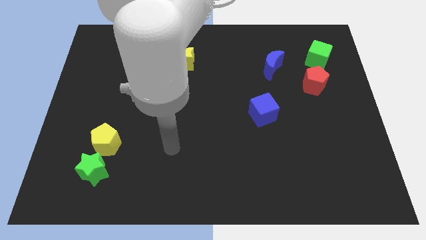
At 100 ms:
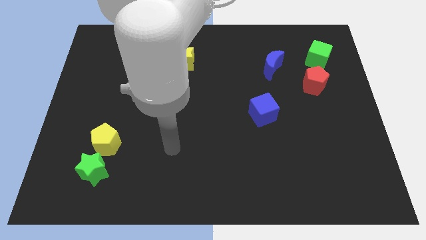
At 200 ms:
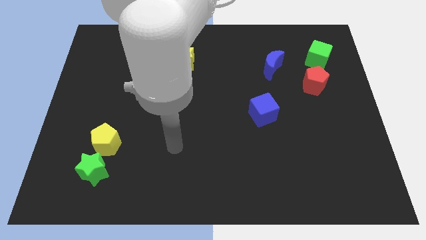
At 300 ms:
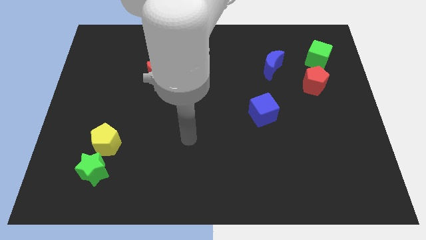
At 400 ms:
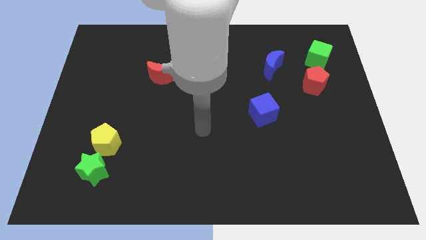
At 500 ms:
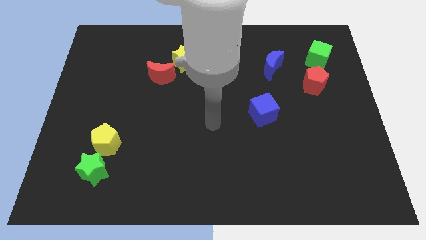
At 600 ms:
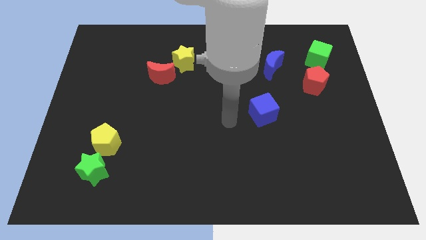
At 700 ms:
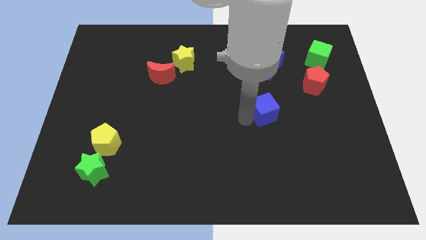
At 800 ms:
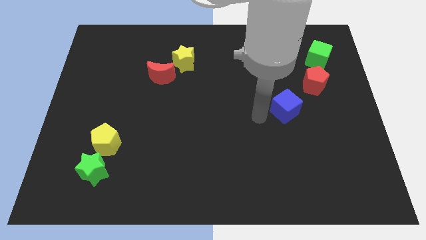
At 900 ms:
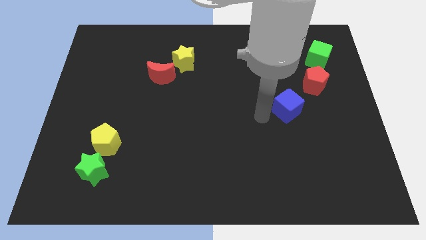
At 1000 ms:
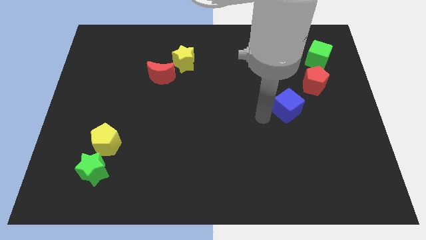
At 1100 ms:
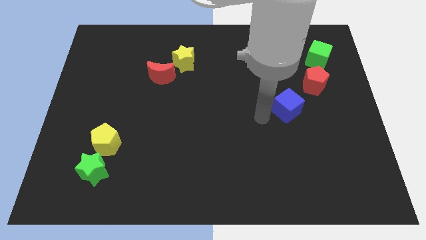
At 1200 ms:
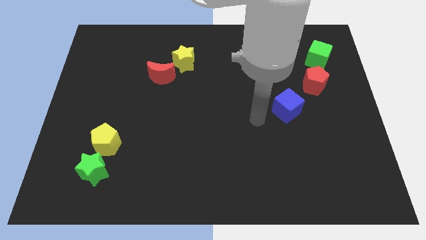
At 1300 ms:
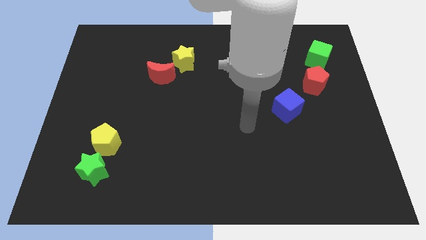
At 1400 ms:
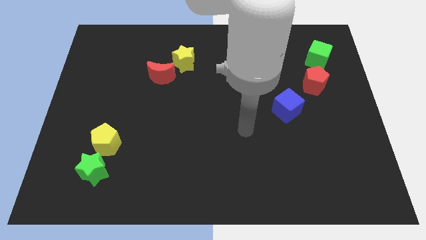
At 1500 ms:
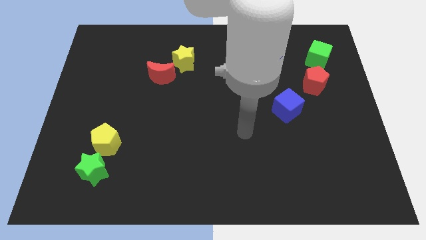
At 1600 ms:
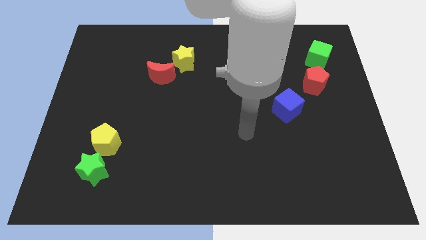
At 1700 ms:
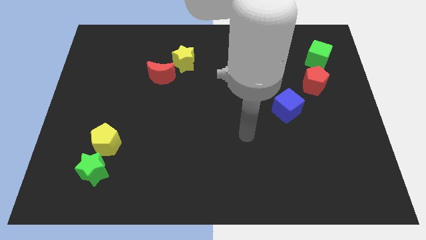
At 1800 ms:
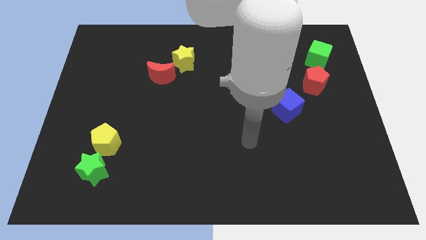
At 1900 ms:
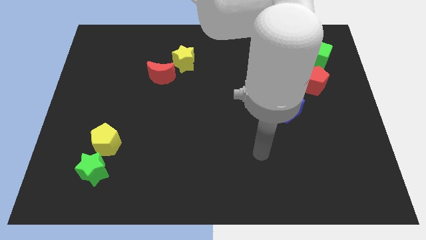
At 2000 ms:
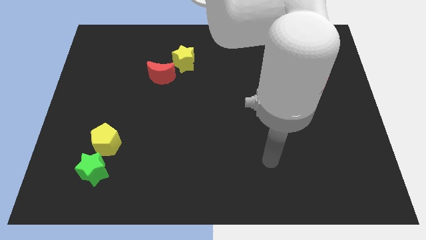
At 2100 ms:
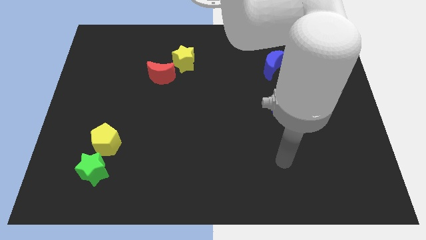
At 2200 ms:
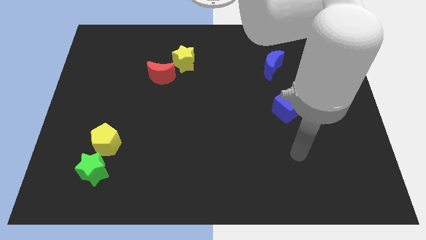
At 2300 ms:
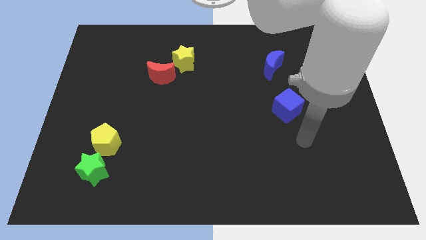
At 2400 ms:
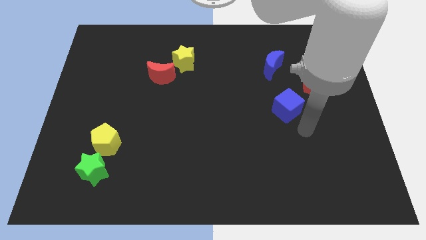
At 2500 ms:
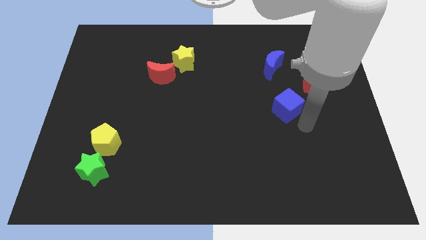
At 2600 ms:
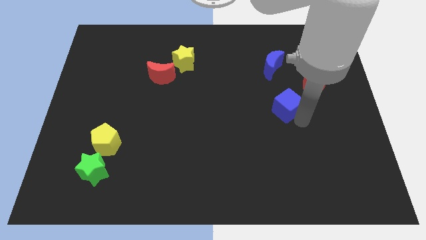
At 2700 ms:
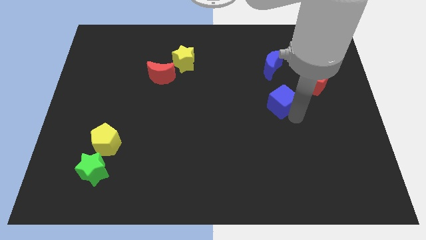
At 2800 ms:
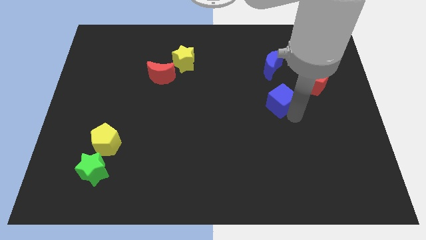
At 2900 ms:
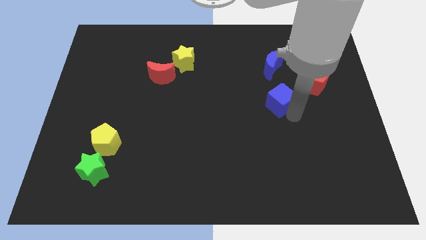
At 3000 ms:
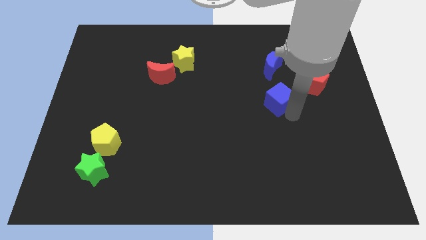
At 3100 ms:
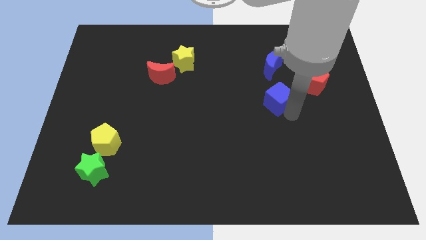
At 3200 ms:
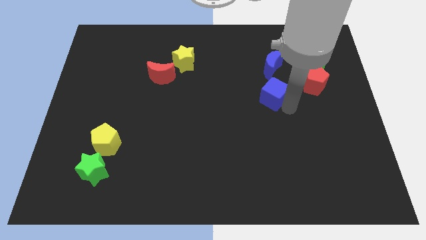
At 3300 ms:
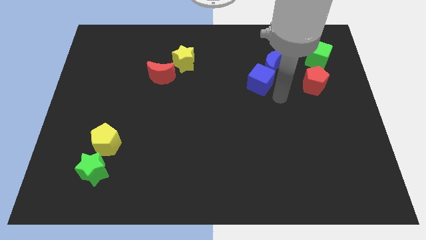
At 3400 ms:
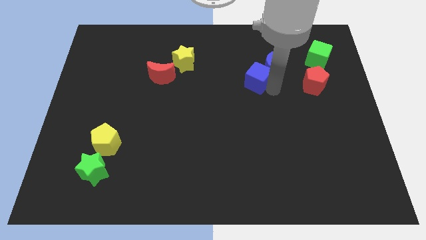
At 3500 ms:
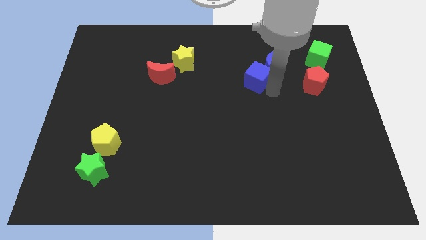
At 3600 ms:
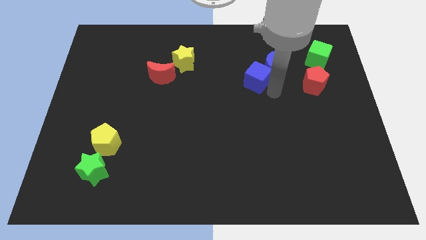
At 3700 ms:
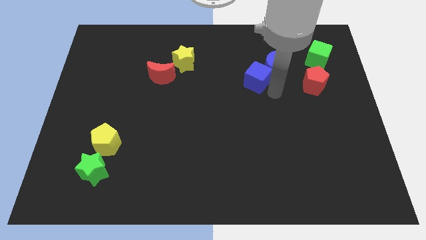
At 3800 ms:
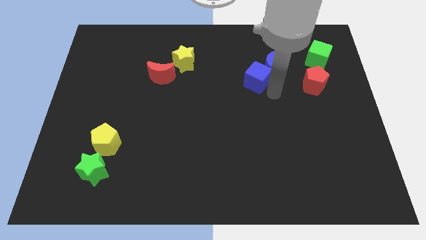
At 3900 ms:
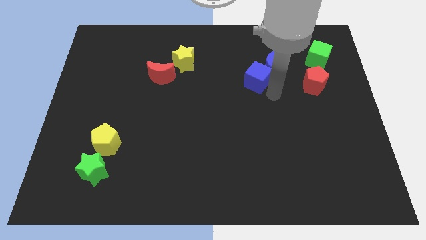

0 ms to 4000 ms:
move the blue cube below the blue crescent

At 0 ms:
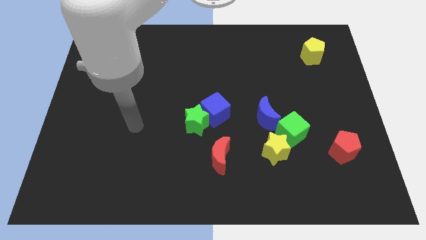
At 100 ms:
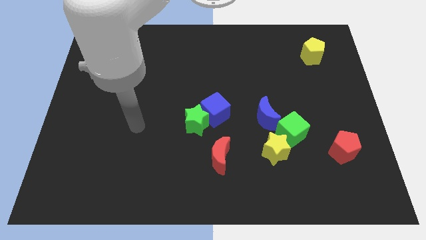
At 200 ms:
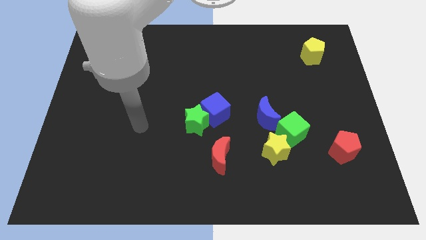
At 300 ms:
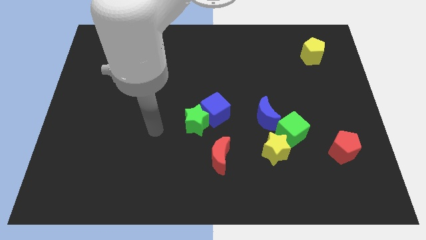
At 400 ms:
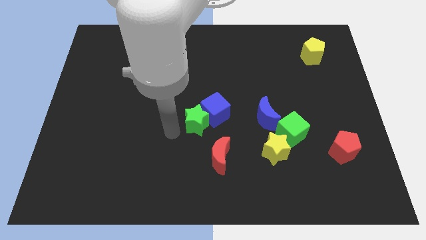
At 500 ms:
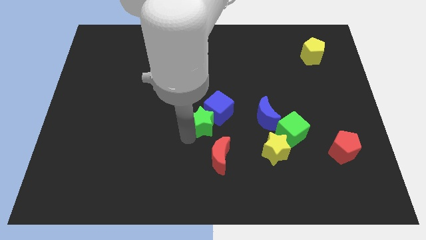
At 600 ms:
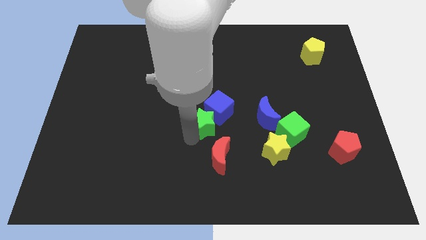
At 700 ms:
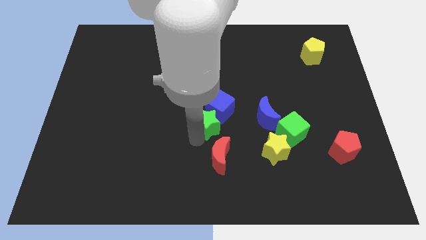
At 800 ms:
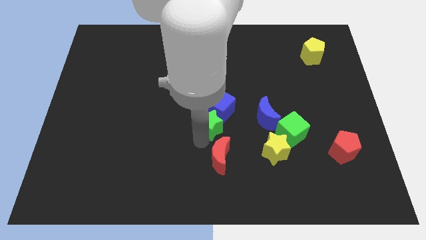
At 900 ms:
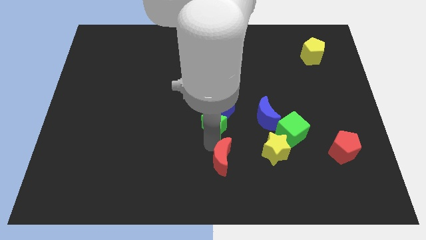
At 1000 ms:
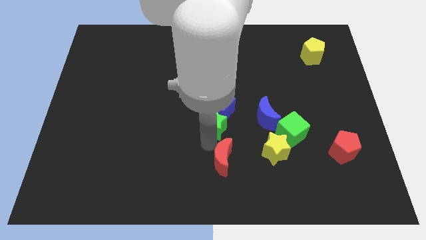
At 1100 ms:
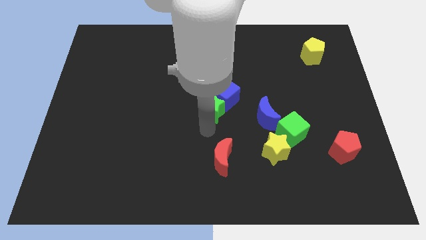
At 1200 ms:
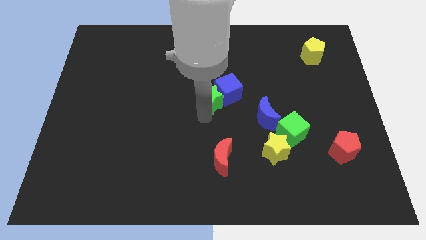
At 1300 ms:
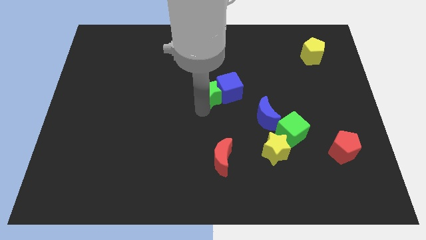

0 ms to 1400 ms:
slightly move the red moon towards the center

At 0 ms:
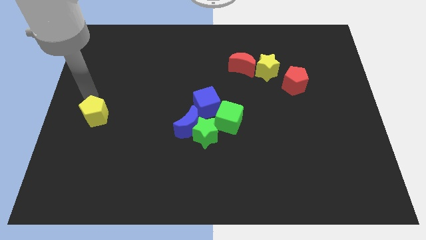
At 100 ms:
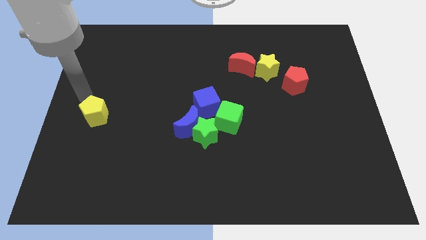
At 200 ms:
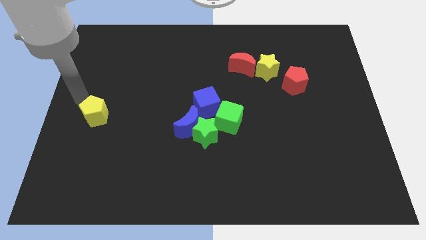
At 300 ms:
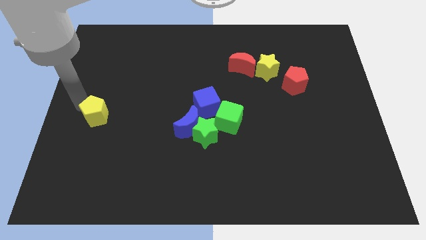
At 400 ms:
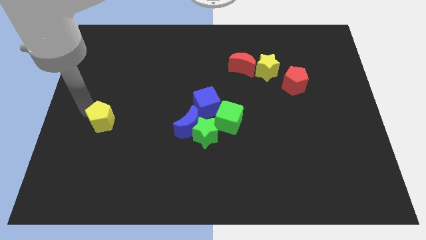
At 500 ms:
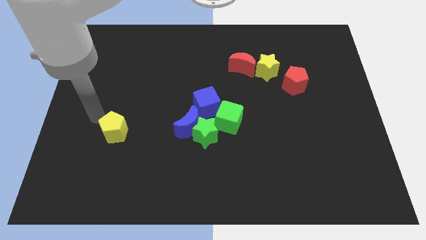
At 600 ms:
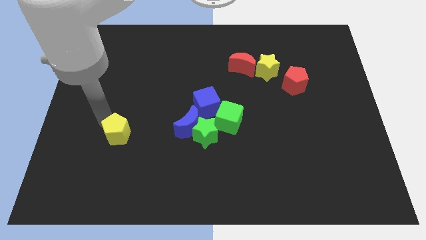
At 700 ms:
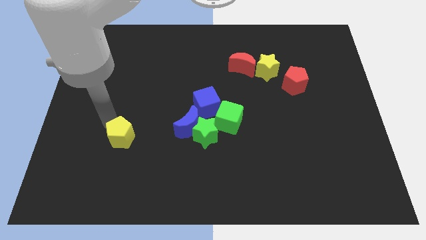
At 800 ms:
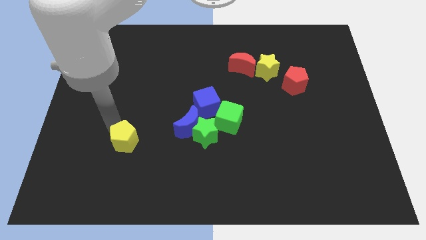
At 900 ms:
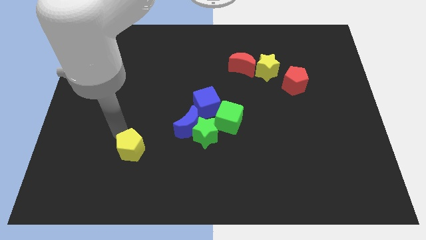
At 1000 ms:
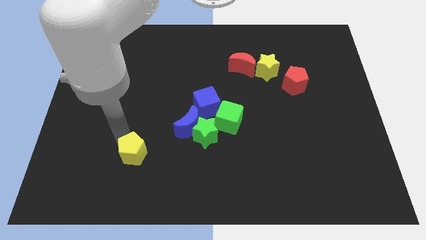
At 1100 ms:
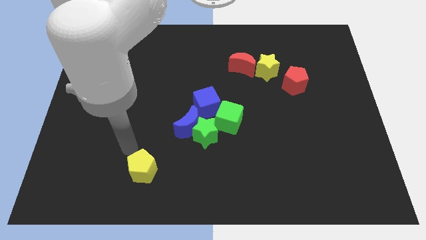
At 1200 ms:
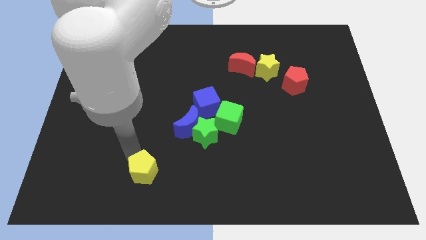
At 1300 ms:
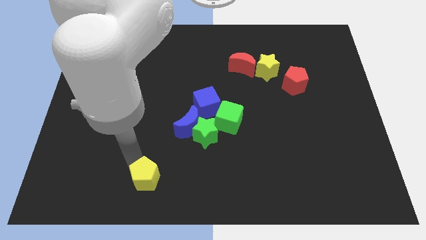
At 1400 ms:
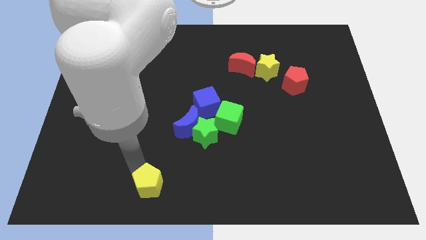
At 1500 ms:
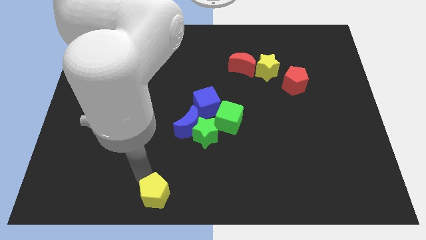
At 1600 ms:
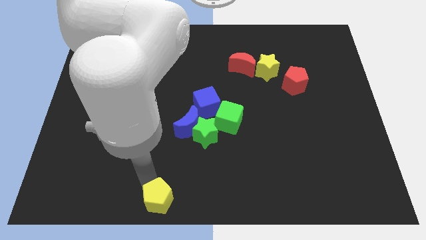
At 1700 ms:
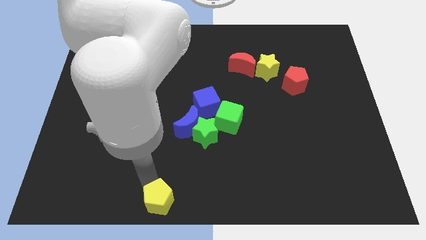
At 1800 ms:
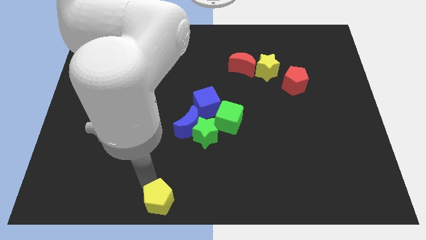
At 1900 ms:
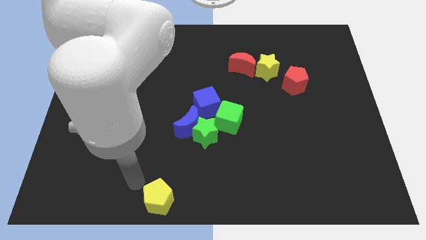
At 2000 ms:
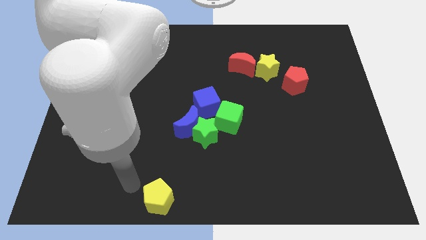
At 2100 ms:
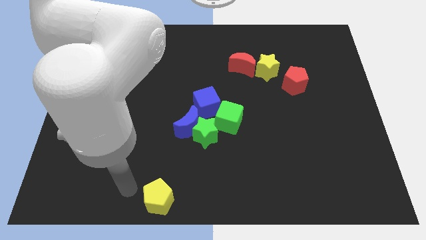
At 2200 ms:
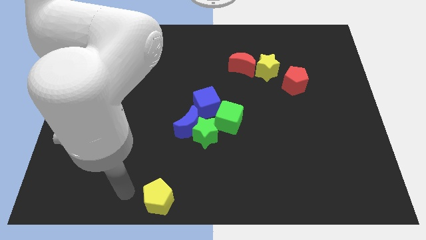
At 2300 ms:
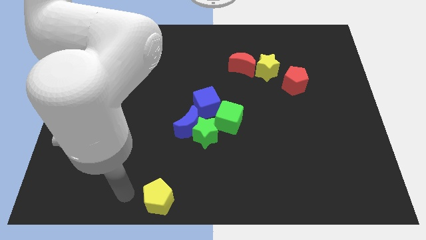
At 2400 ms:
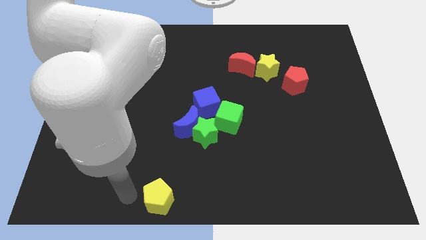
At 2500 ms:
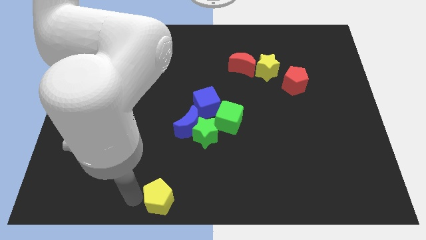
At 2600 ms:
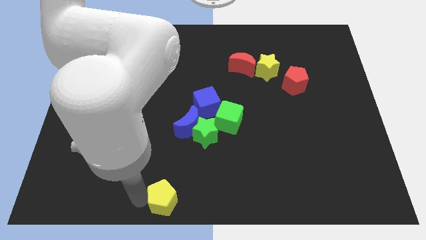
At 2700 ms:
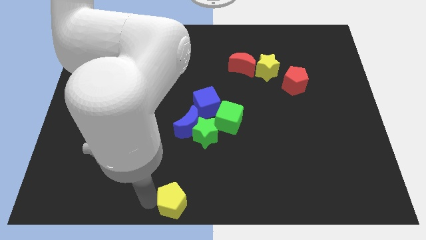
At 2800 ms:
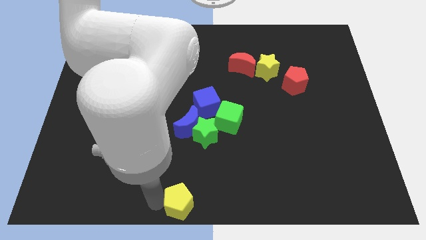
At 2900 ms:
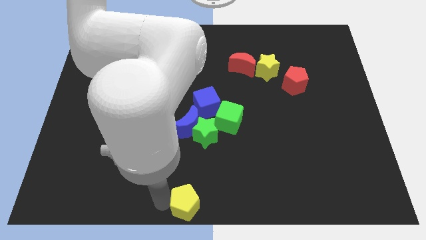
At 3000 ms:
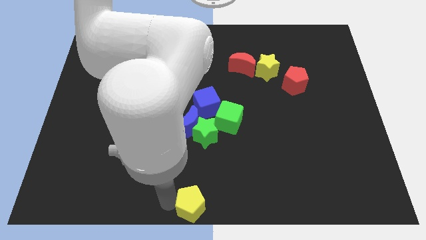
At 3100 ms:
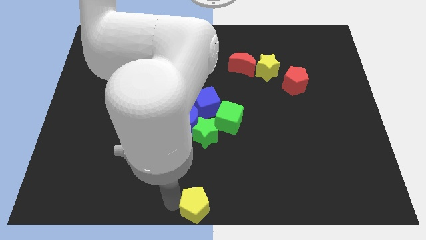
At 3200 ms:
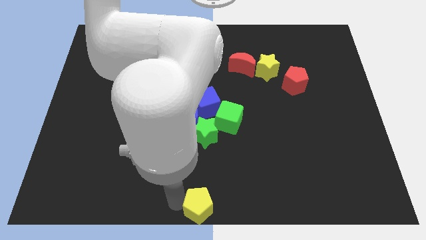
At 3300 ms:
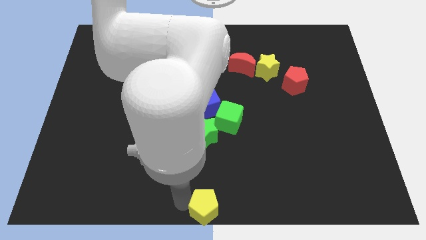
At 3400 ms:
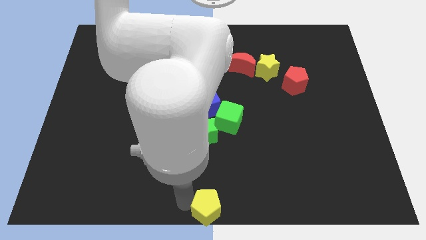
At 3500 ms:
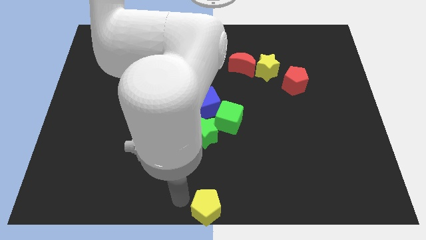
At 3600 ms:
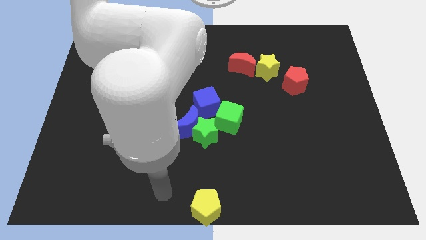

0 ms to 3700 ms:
drag the yellow pentagon to the bottom center
